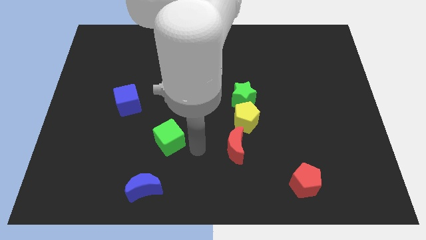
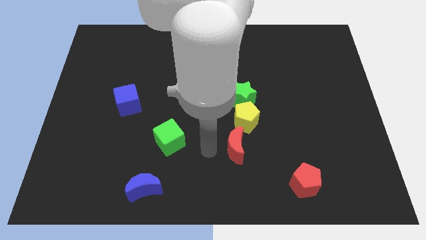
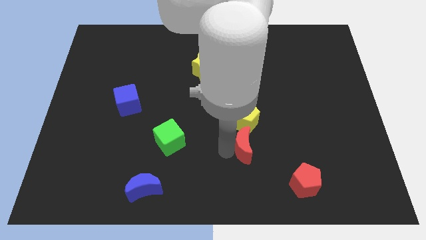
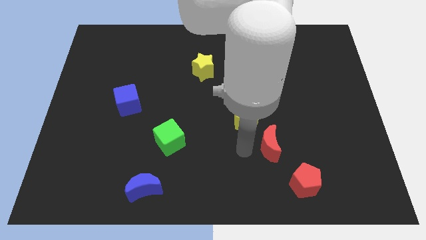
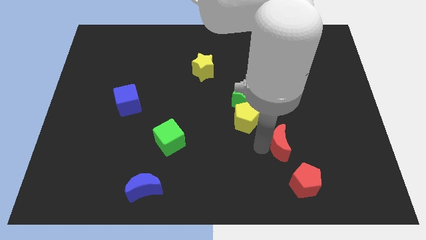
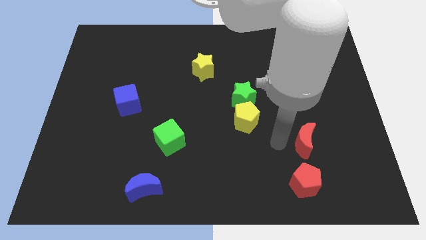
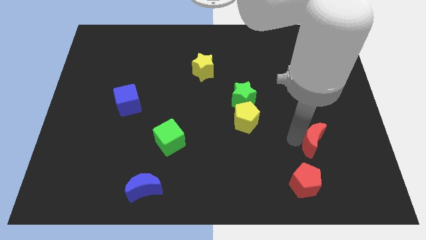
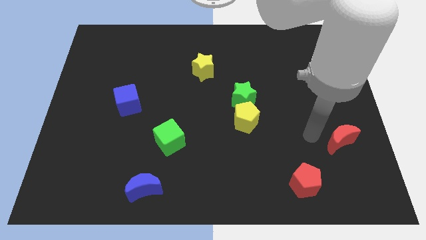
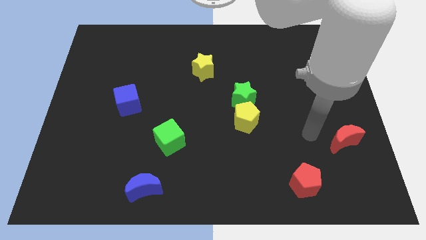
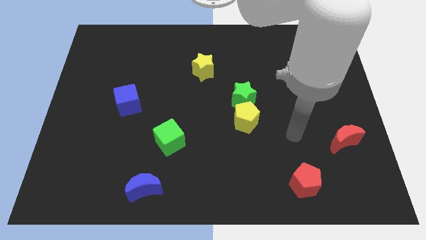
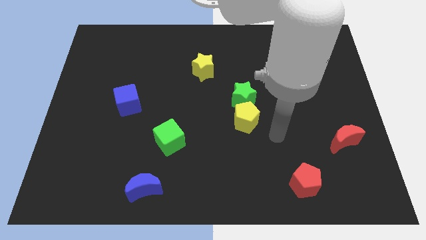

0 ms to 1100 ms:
move the red moon towards the center right

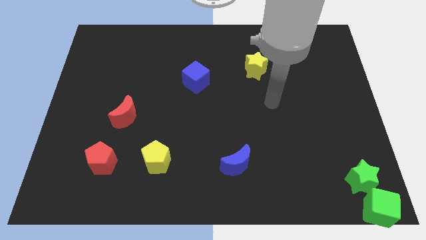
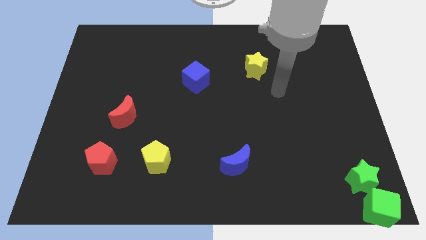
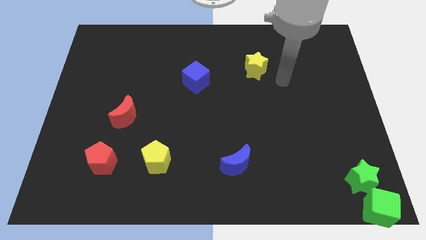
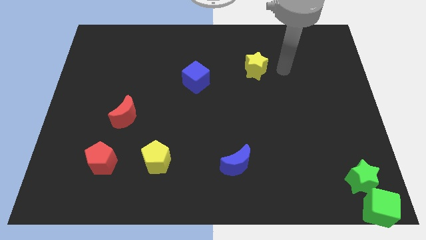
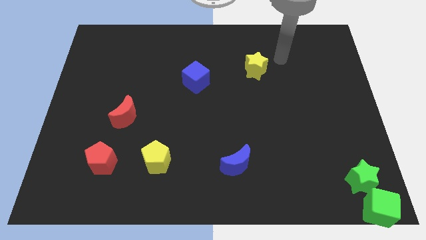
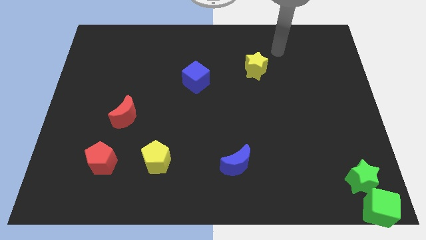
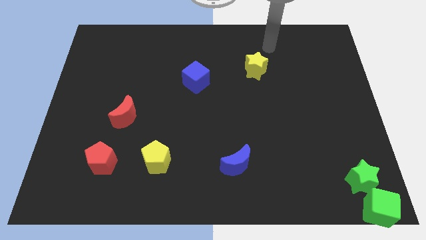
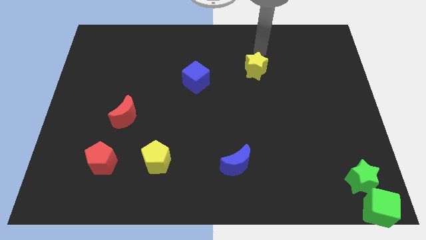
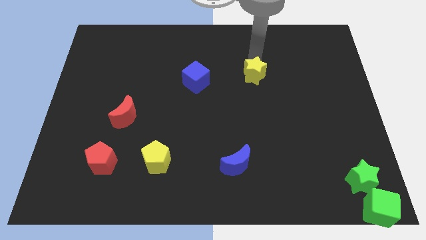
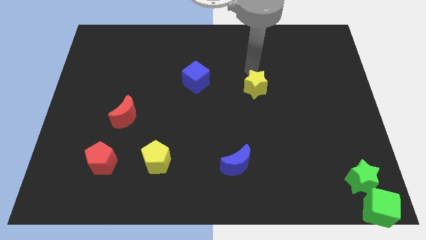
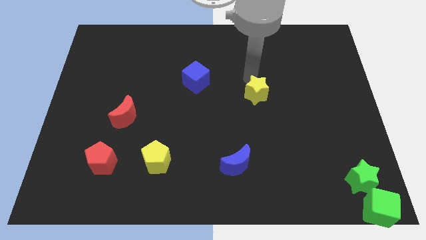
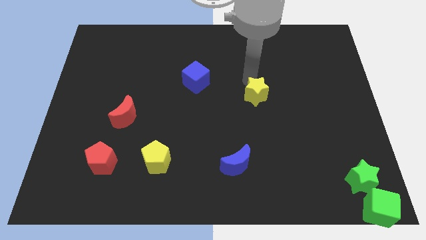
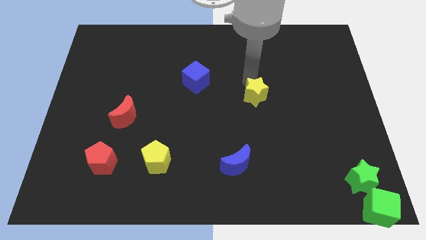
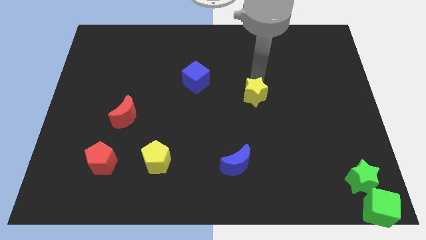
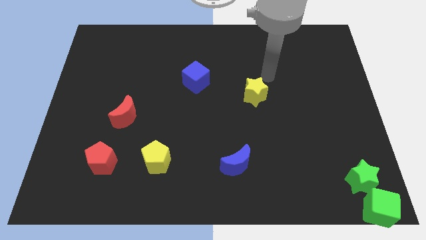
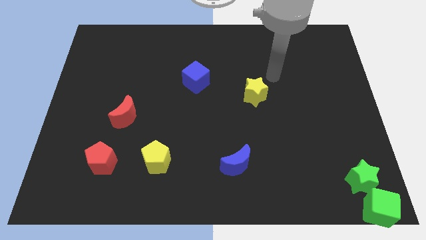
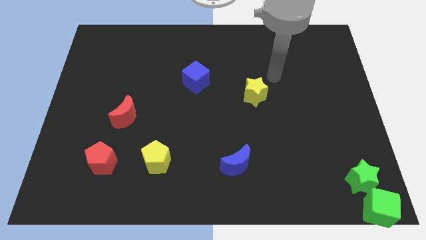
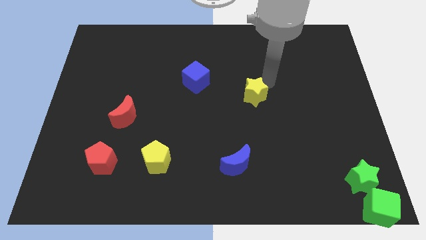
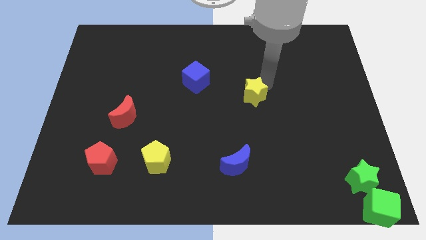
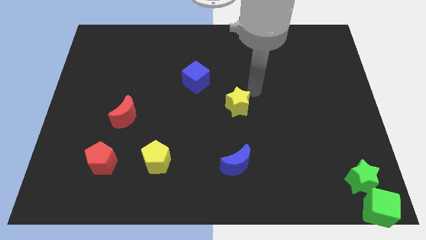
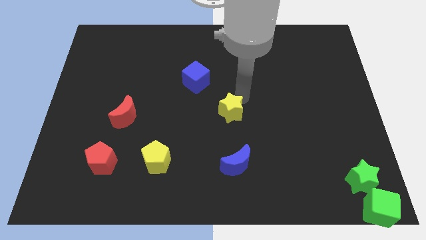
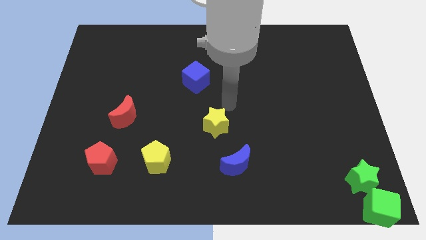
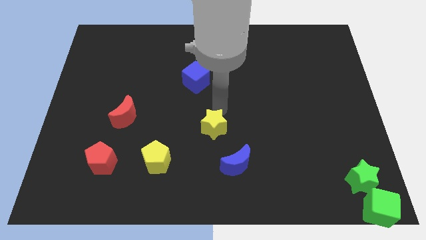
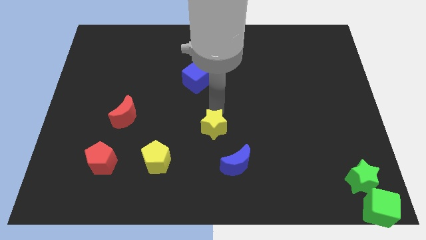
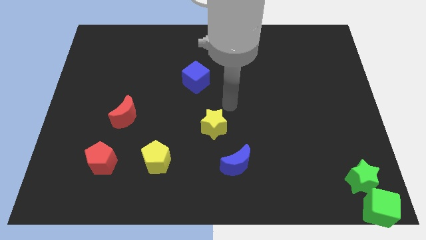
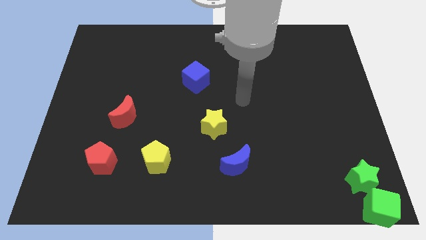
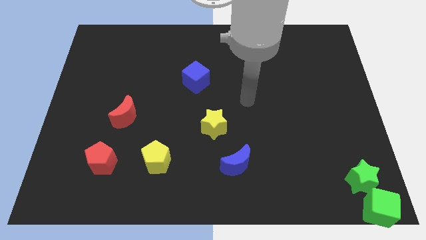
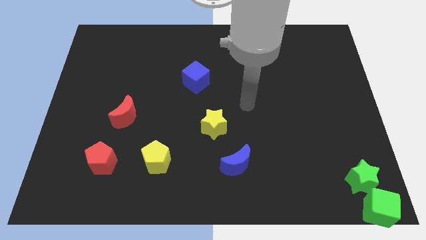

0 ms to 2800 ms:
move the yellow star between blue cube and blue moon

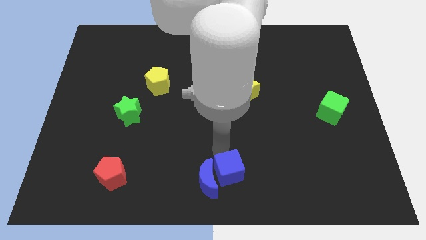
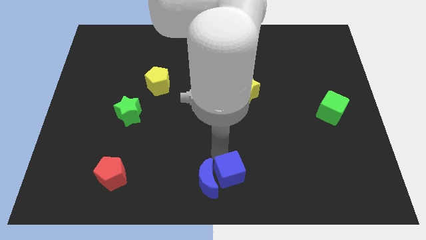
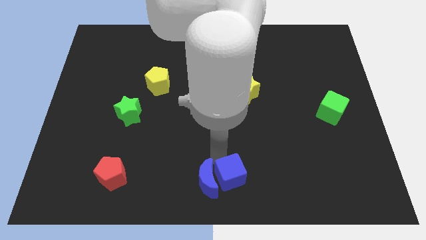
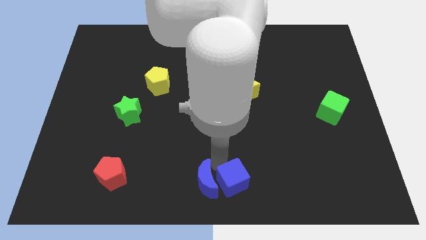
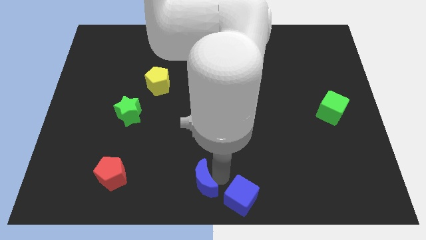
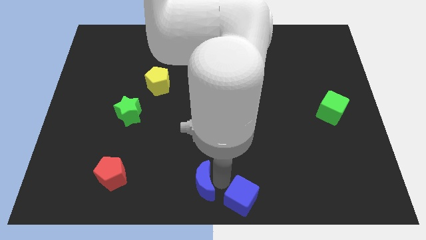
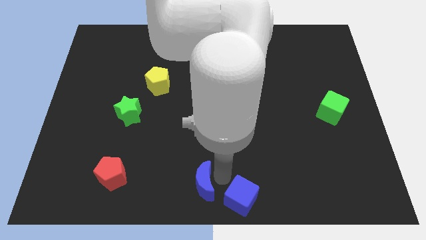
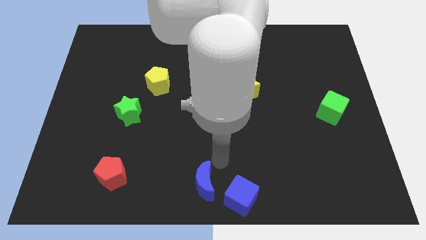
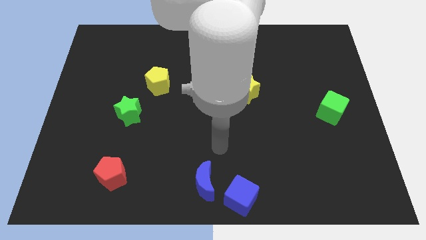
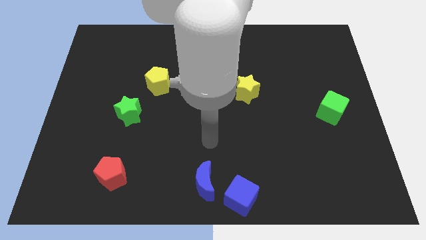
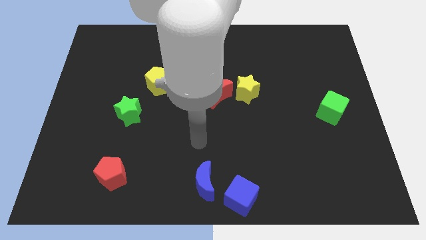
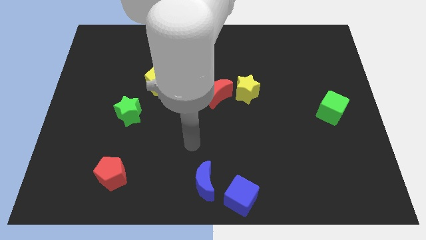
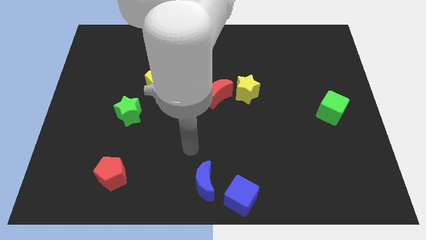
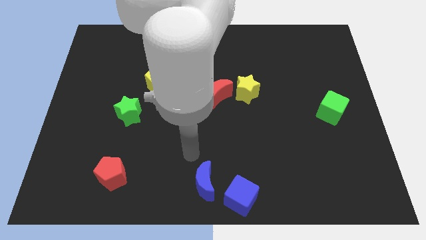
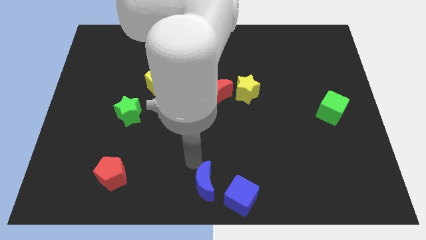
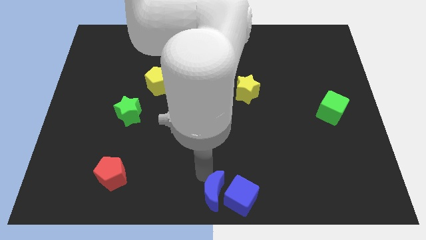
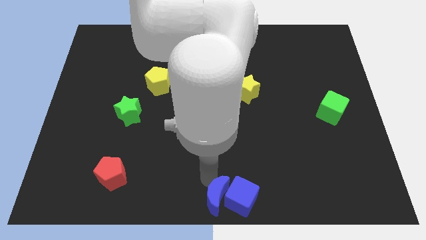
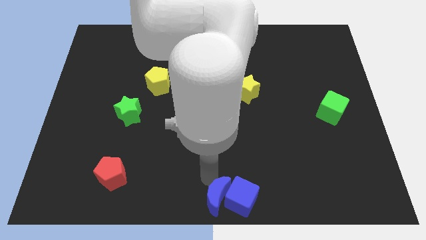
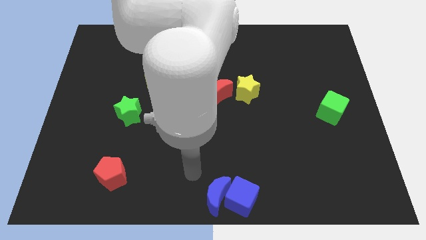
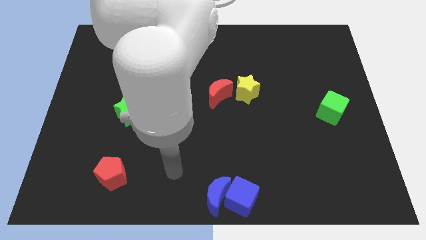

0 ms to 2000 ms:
push the blue cube and blue moon together to the bottom center of the board

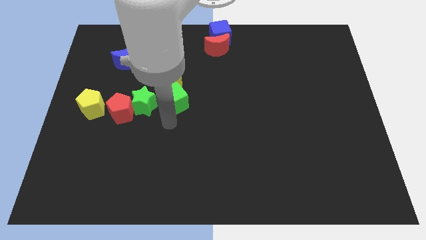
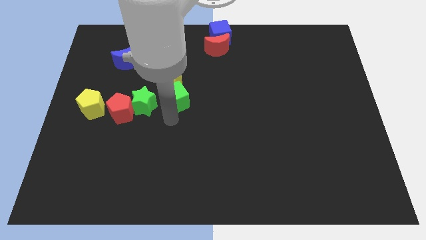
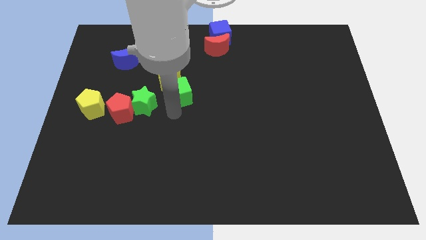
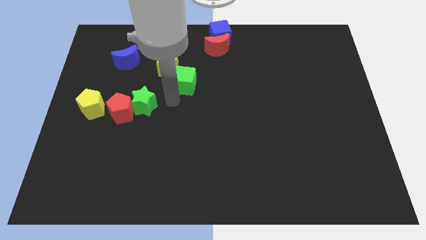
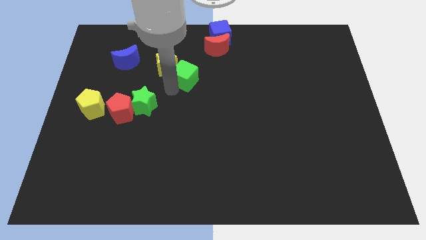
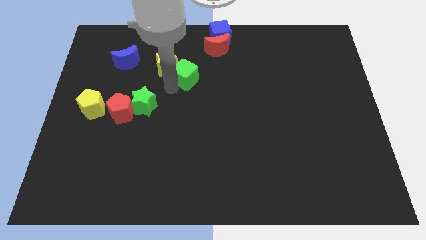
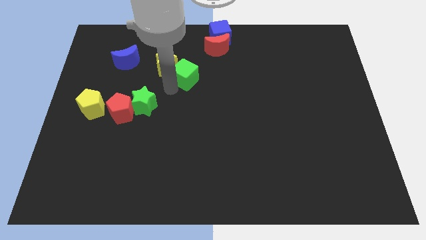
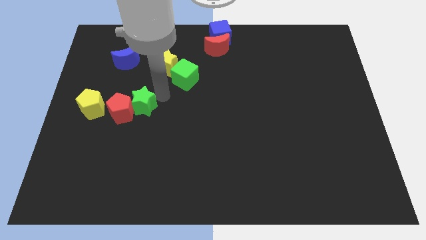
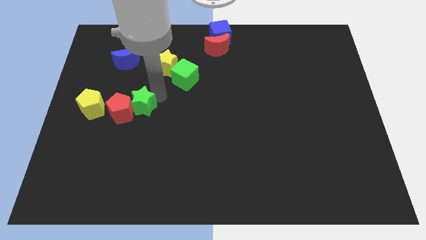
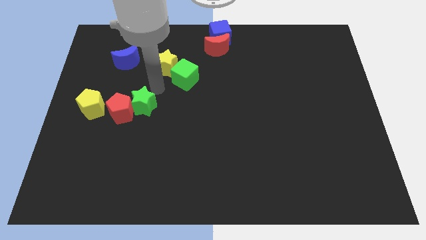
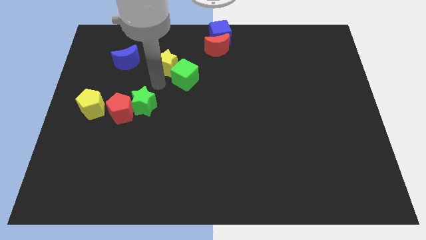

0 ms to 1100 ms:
move green cube upwards

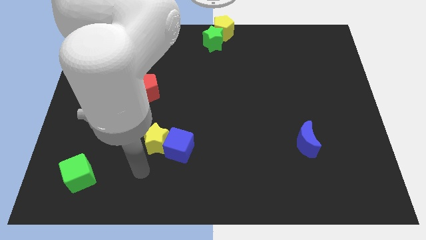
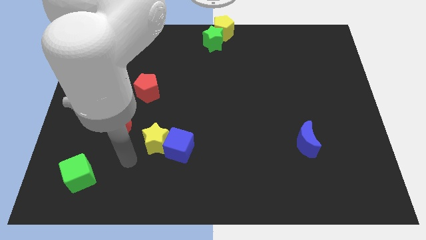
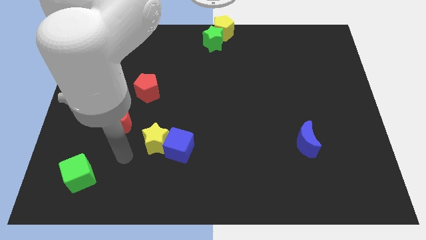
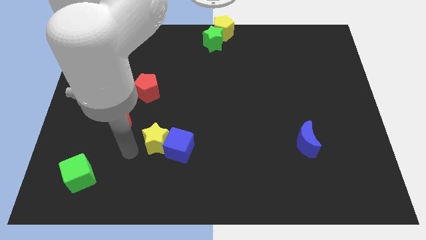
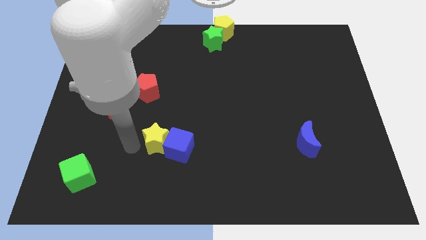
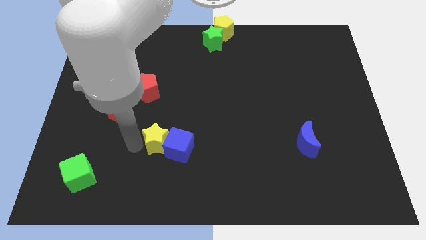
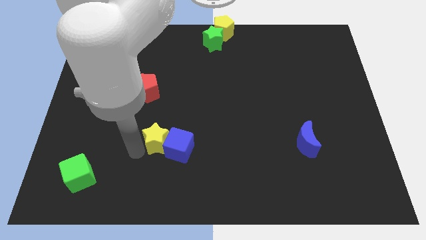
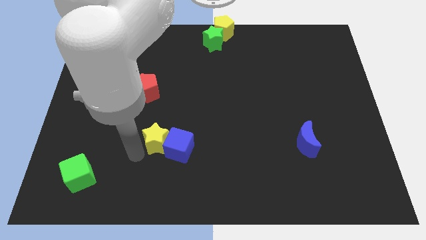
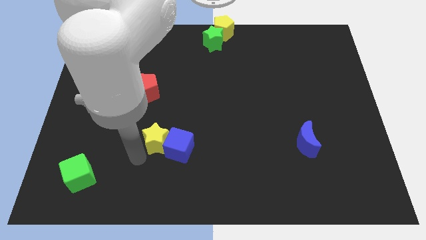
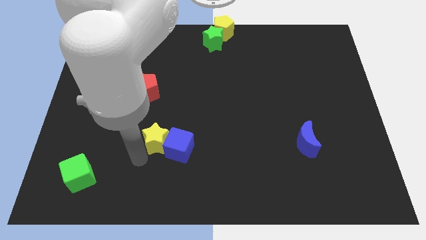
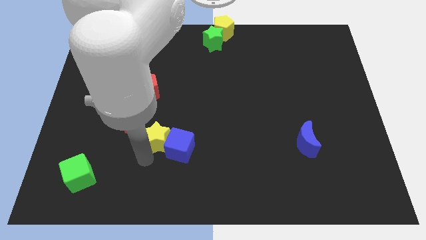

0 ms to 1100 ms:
slightly push the yellow star towards top

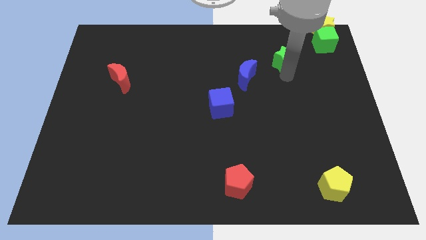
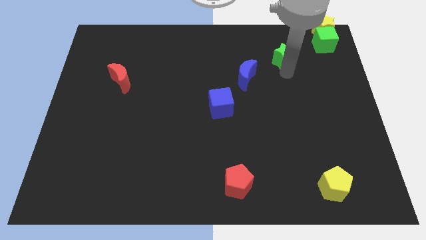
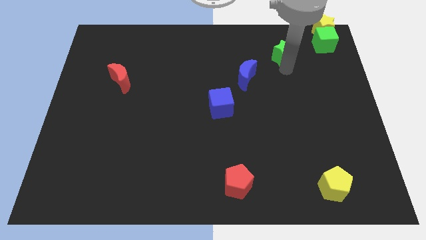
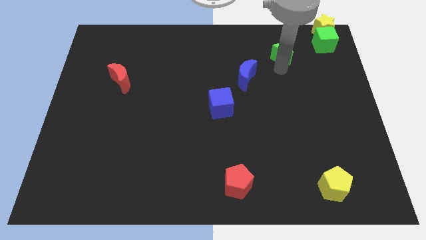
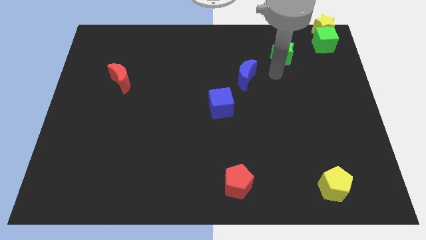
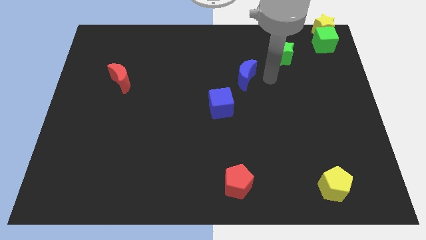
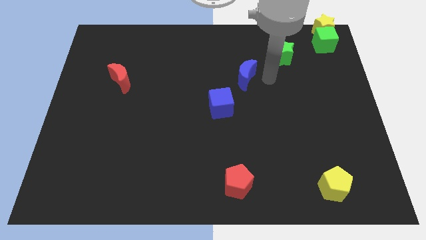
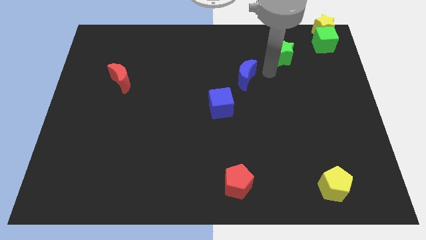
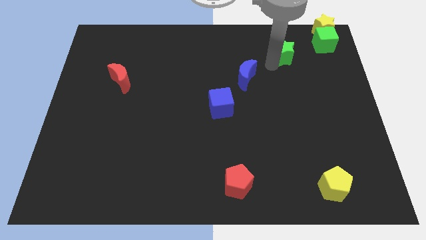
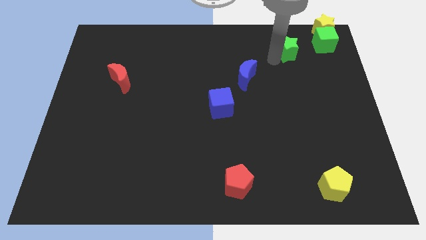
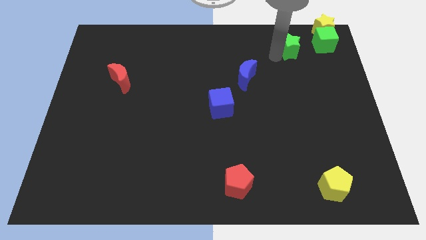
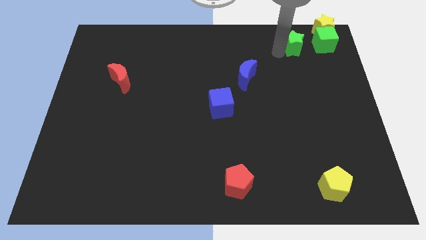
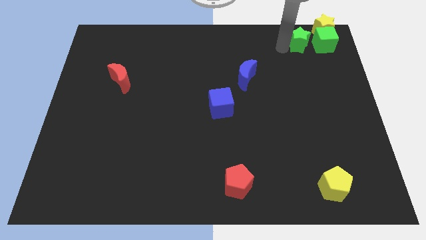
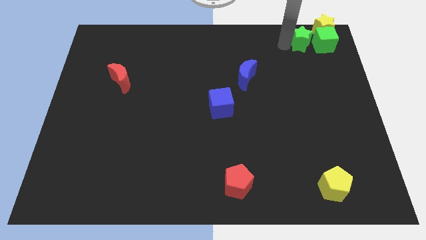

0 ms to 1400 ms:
place green star to the left of green cube
